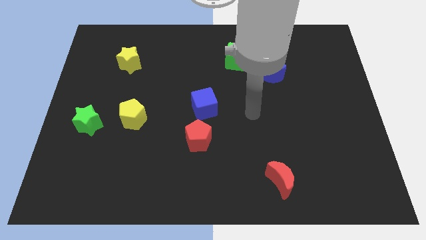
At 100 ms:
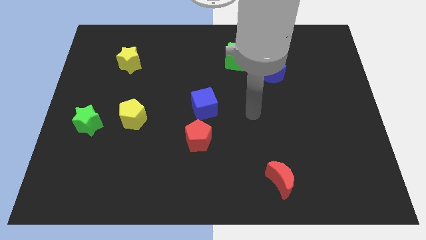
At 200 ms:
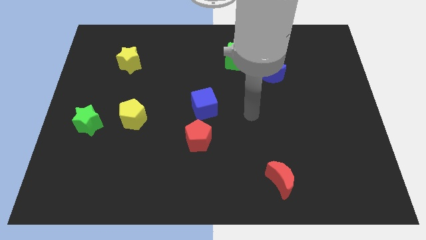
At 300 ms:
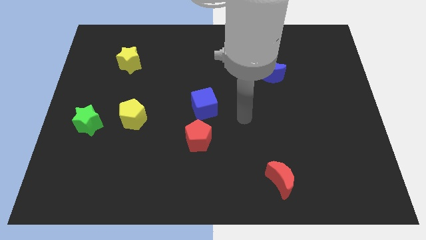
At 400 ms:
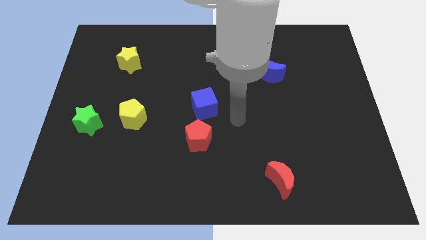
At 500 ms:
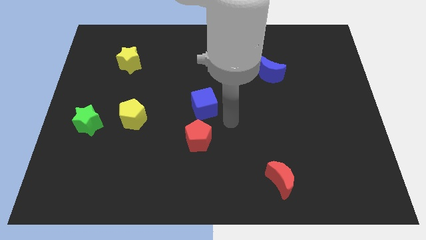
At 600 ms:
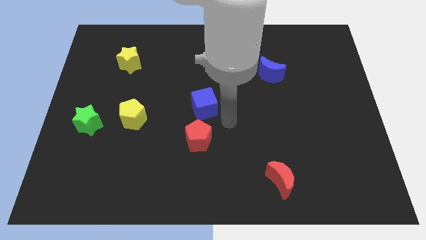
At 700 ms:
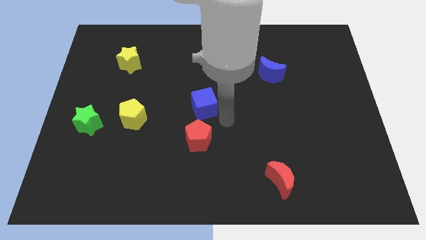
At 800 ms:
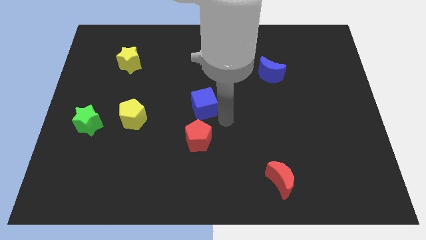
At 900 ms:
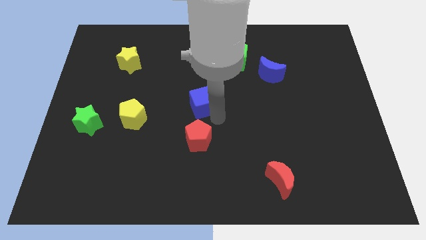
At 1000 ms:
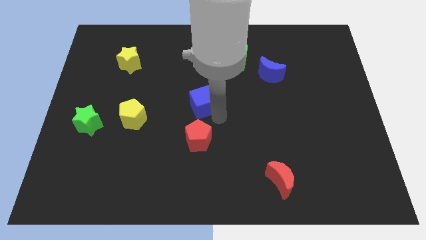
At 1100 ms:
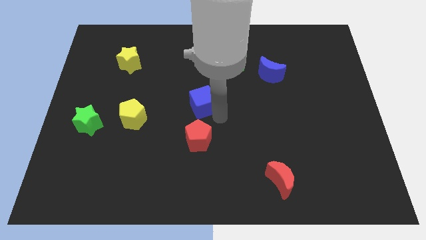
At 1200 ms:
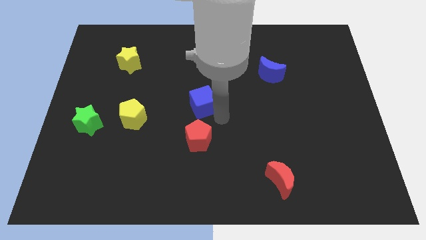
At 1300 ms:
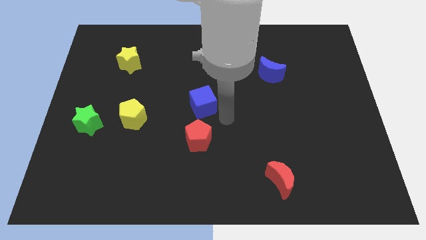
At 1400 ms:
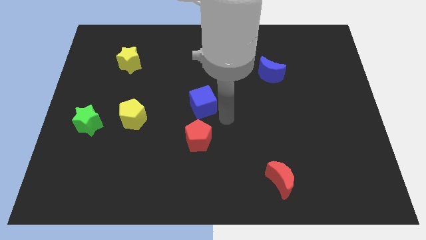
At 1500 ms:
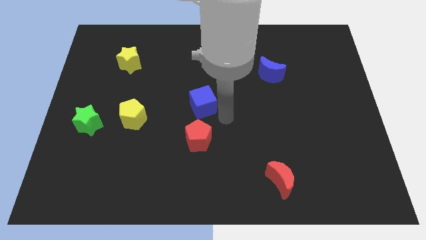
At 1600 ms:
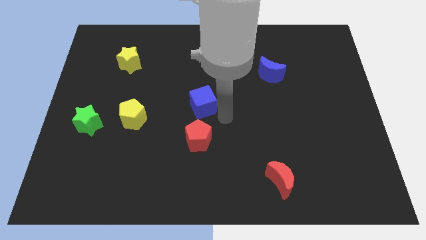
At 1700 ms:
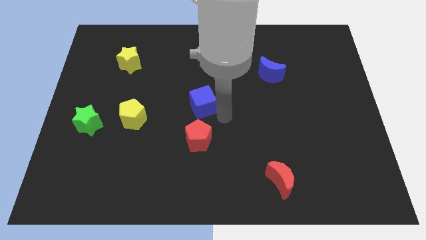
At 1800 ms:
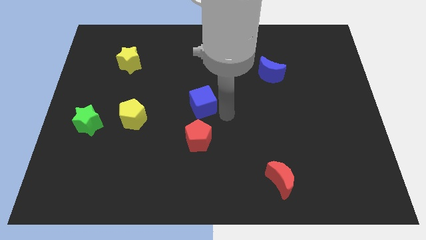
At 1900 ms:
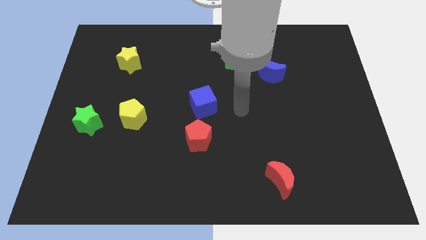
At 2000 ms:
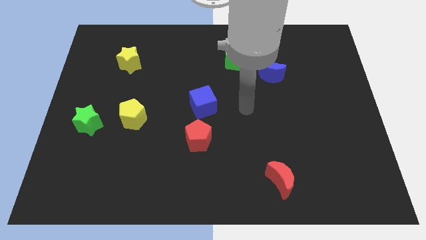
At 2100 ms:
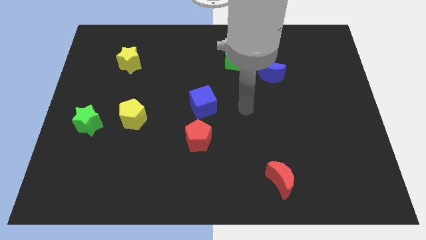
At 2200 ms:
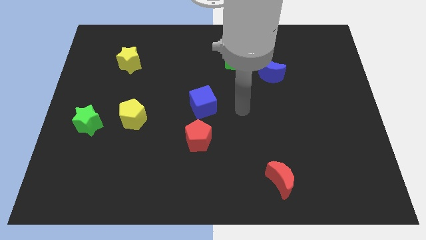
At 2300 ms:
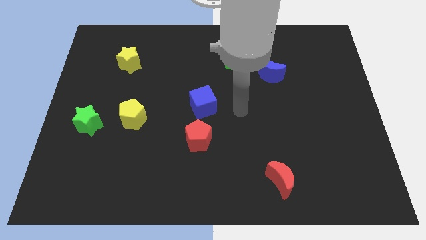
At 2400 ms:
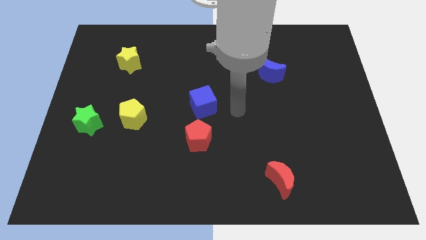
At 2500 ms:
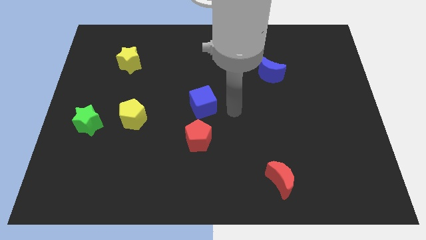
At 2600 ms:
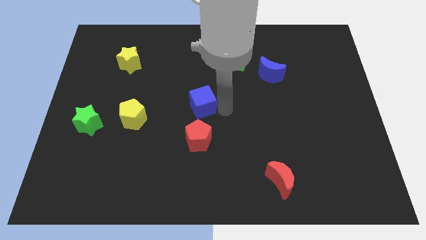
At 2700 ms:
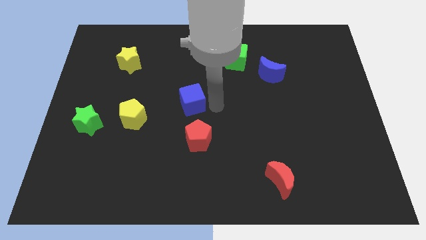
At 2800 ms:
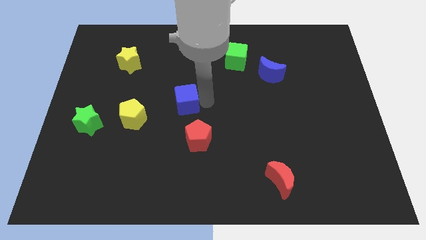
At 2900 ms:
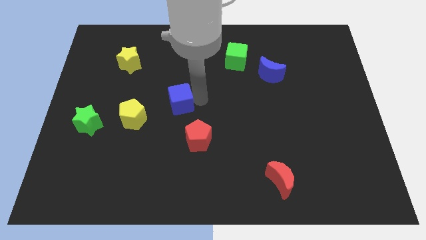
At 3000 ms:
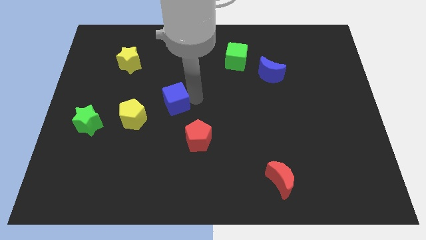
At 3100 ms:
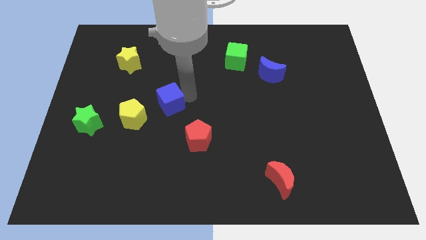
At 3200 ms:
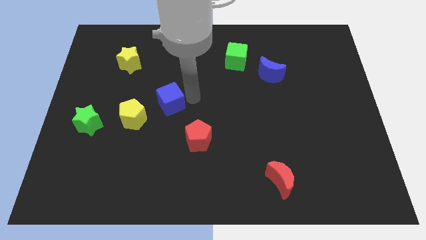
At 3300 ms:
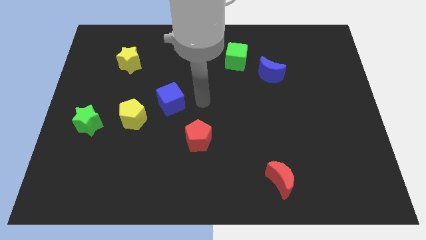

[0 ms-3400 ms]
push blue cube diagonally below yellow star

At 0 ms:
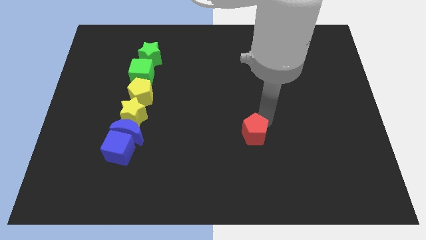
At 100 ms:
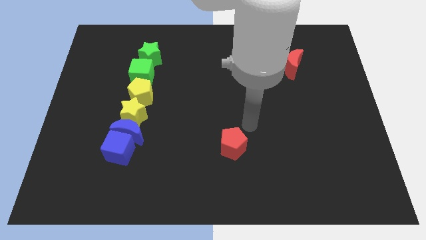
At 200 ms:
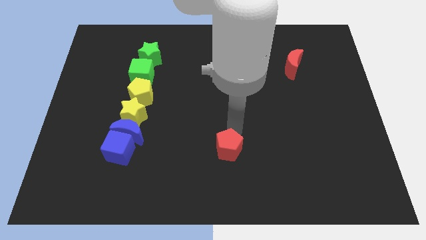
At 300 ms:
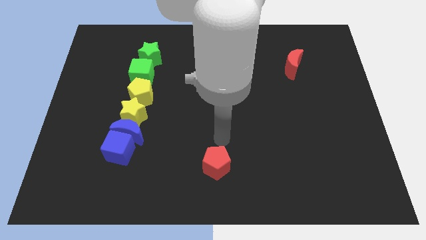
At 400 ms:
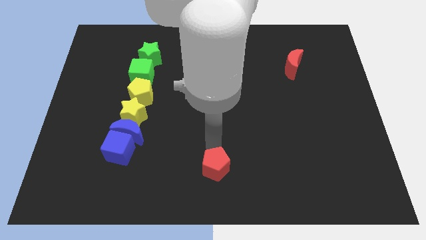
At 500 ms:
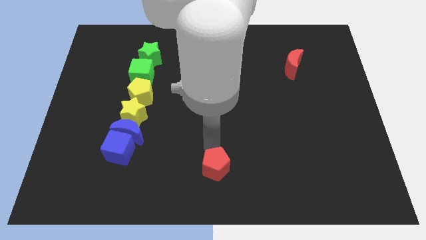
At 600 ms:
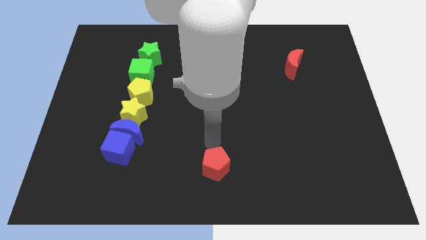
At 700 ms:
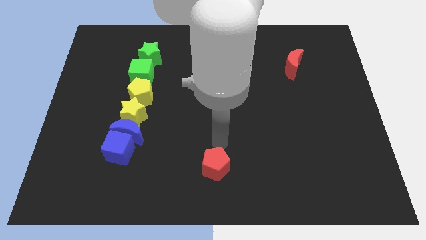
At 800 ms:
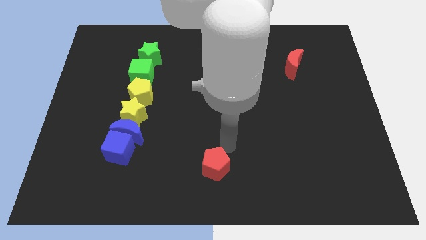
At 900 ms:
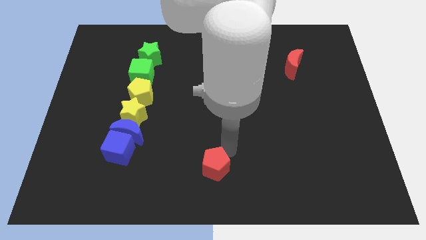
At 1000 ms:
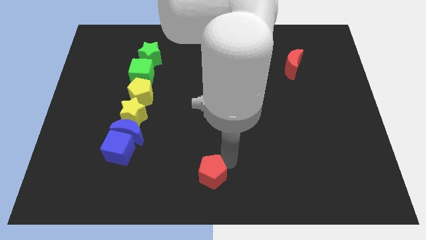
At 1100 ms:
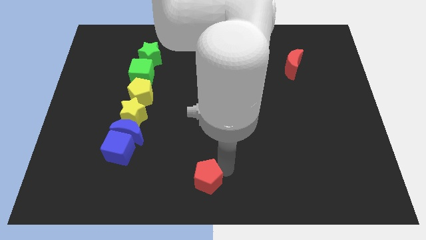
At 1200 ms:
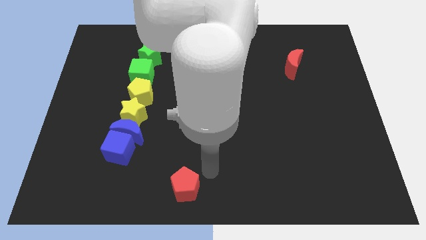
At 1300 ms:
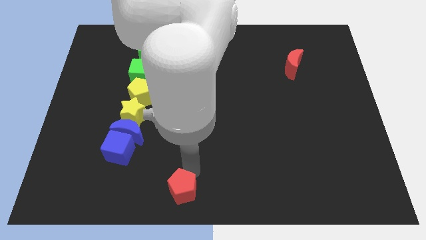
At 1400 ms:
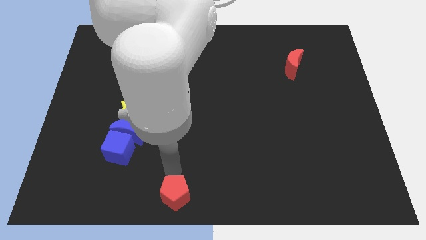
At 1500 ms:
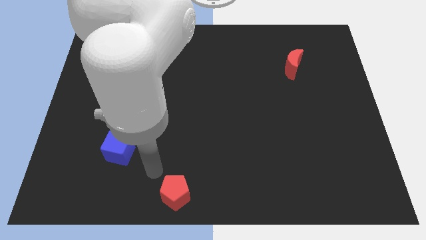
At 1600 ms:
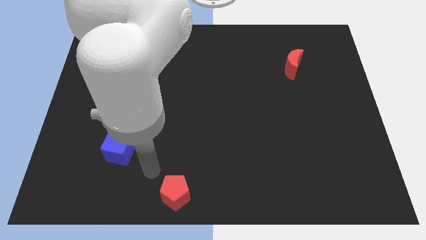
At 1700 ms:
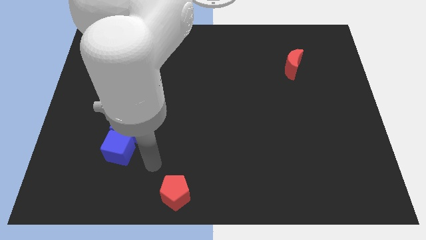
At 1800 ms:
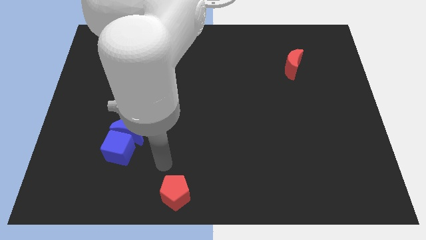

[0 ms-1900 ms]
place the red pentagon at the bottom center of the board

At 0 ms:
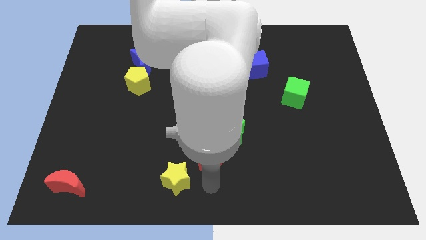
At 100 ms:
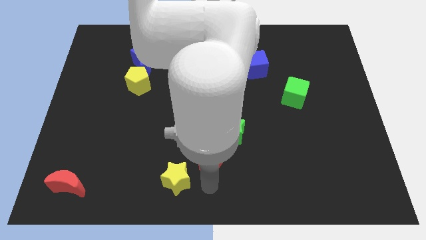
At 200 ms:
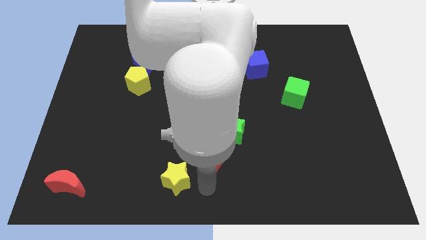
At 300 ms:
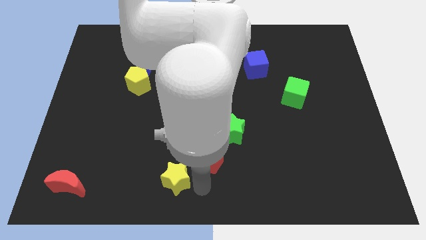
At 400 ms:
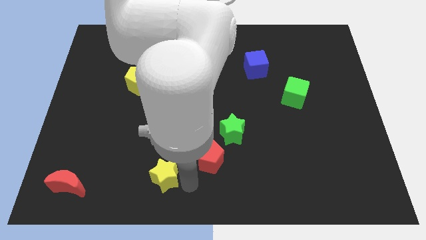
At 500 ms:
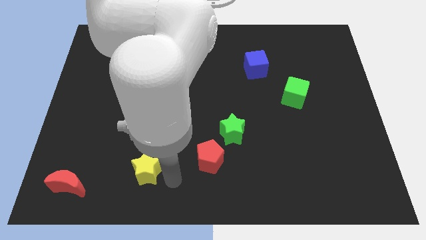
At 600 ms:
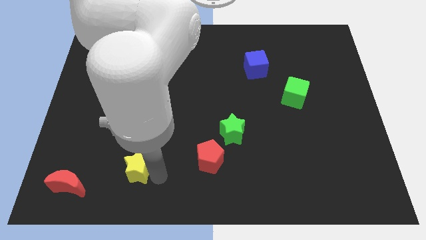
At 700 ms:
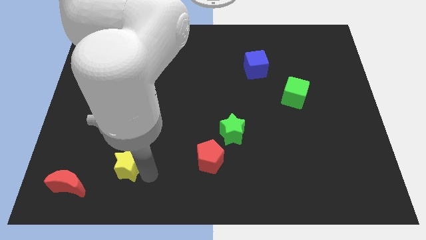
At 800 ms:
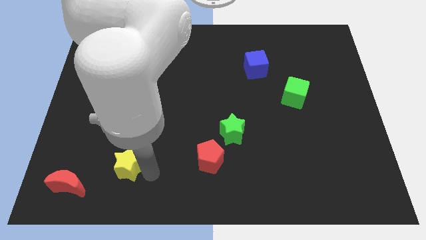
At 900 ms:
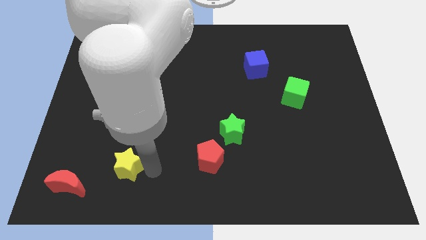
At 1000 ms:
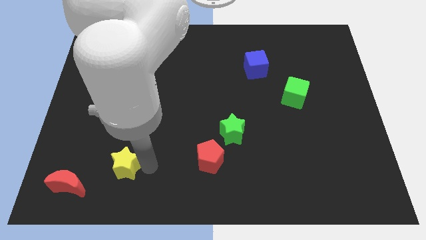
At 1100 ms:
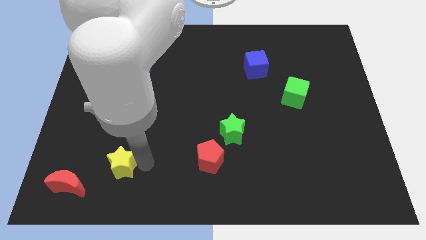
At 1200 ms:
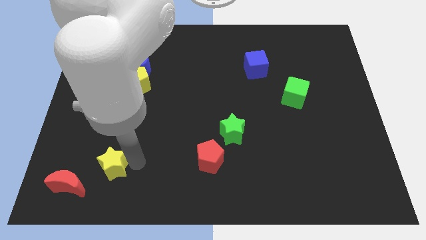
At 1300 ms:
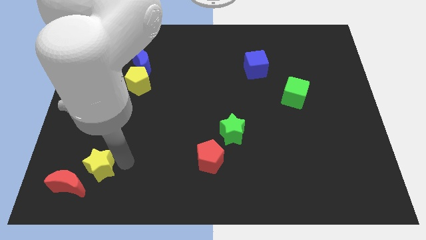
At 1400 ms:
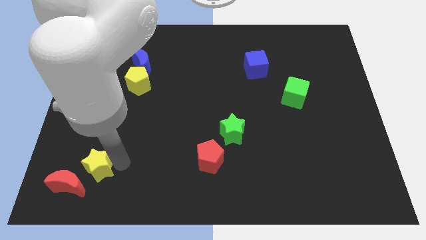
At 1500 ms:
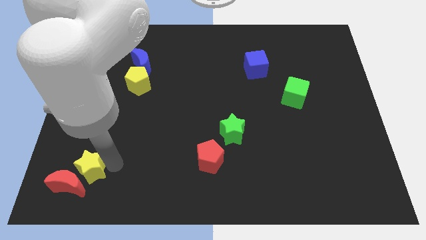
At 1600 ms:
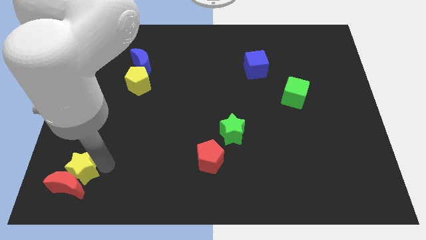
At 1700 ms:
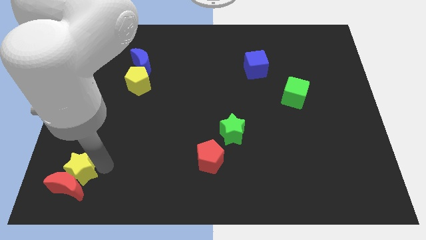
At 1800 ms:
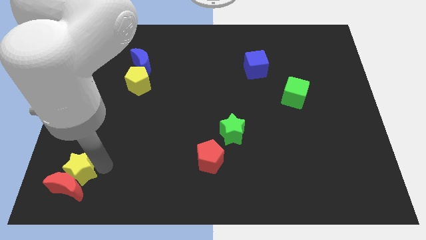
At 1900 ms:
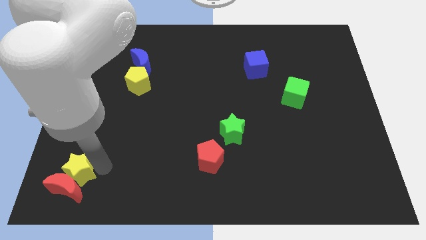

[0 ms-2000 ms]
push the yellow star into the red moon

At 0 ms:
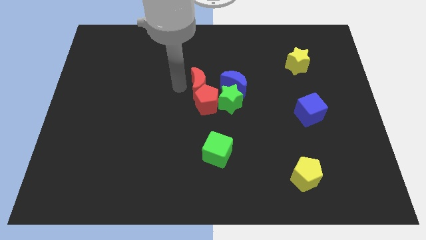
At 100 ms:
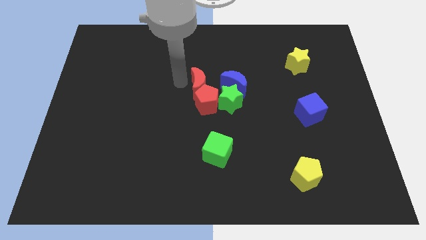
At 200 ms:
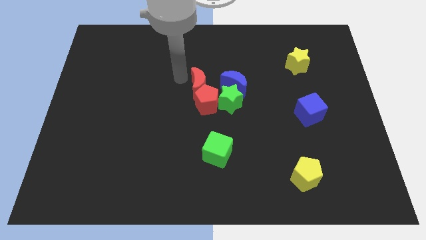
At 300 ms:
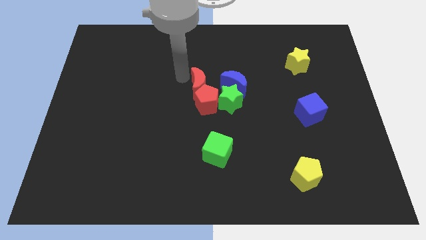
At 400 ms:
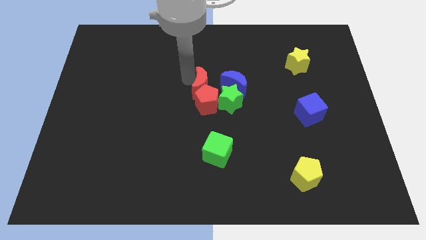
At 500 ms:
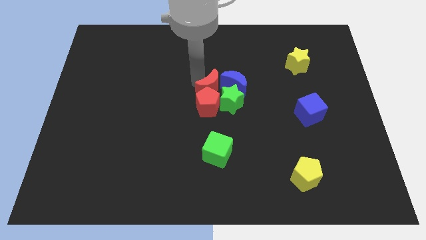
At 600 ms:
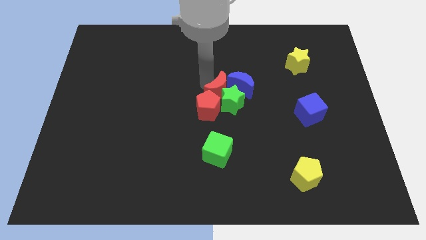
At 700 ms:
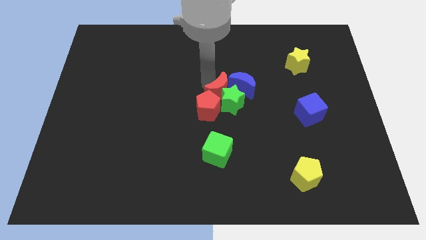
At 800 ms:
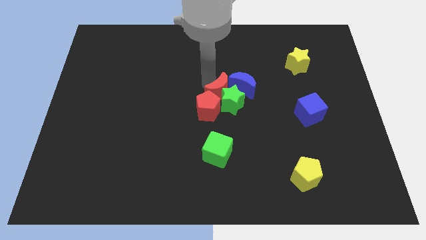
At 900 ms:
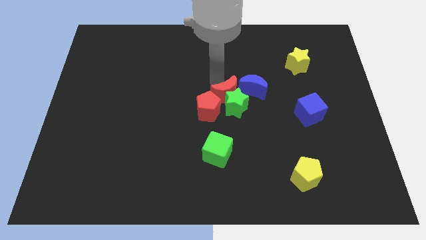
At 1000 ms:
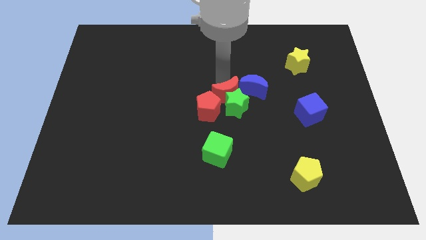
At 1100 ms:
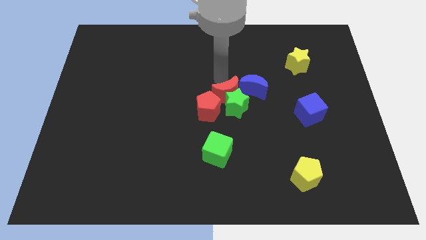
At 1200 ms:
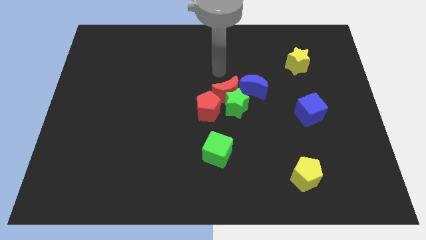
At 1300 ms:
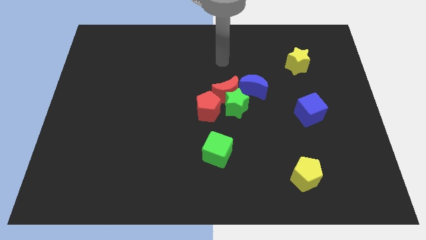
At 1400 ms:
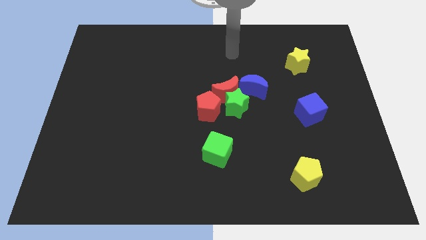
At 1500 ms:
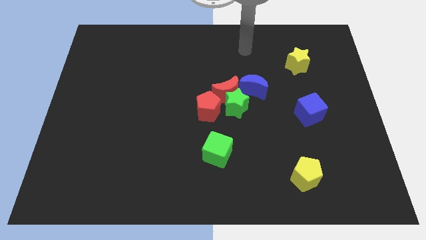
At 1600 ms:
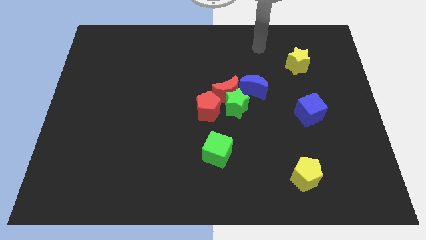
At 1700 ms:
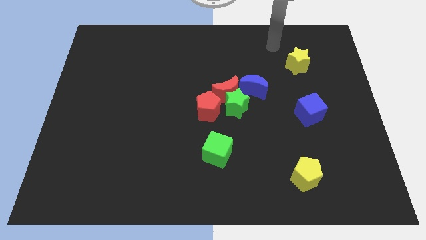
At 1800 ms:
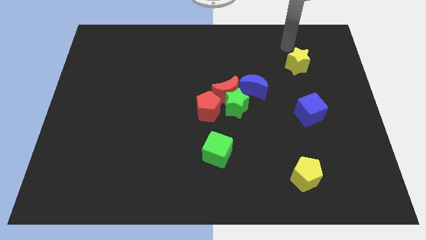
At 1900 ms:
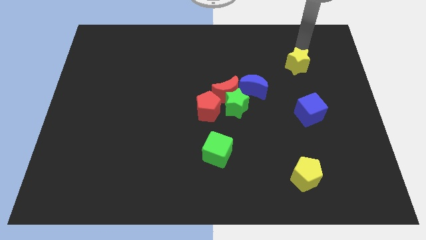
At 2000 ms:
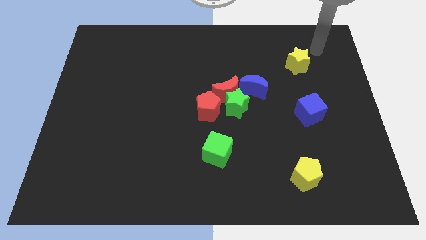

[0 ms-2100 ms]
move red moon above the green star
